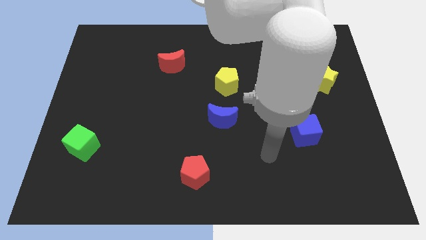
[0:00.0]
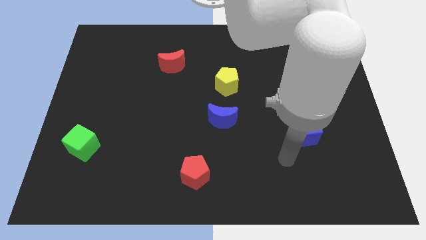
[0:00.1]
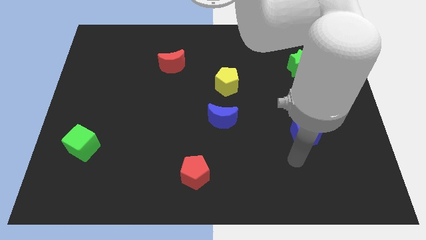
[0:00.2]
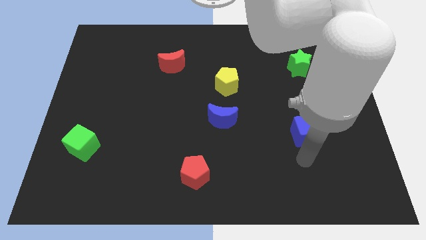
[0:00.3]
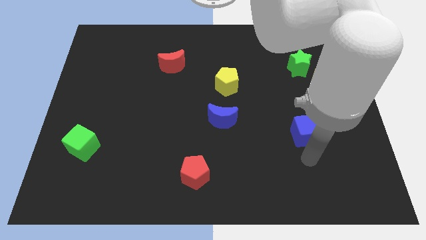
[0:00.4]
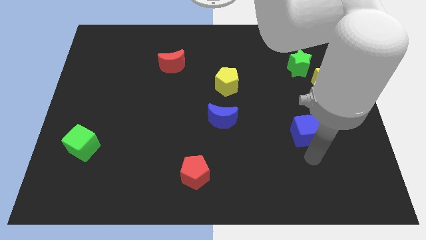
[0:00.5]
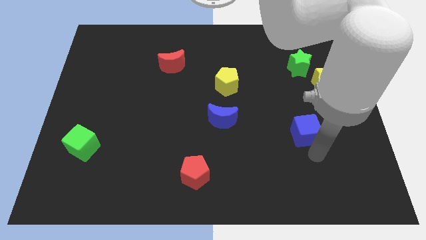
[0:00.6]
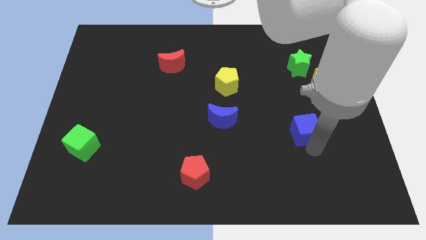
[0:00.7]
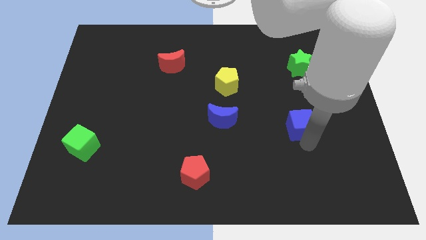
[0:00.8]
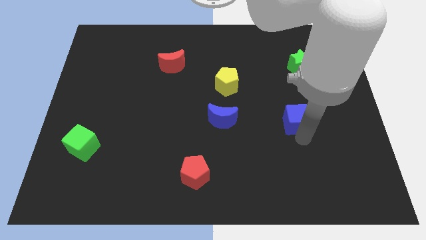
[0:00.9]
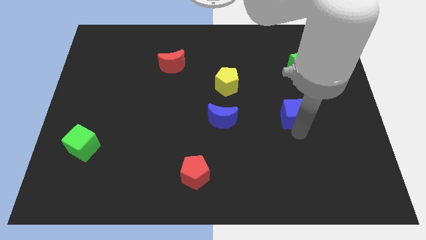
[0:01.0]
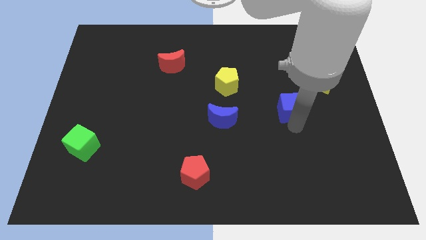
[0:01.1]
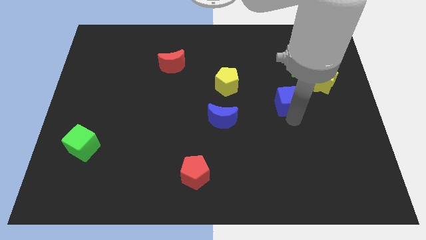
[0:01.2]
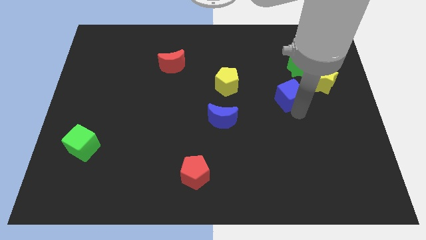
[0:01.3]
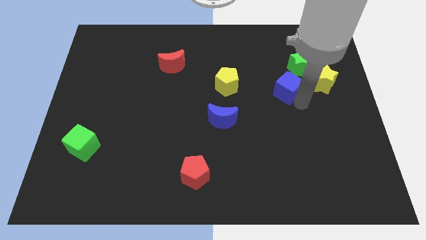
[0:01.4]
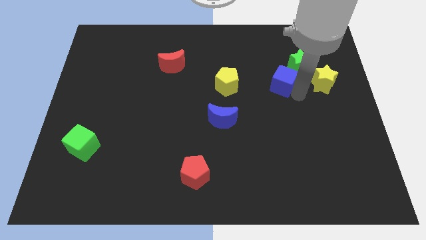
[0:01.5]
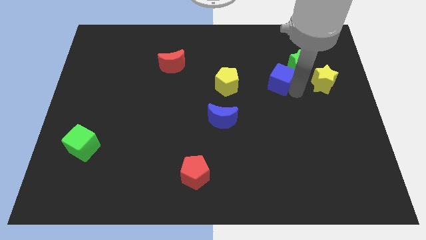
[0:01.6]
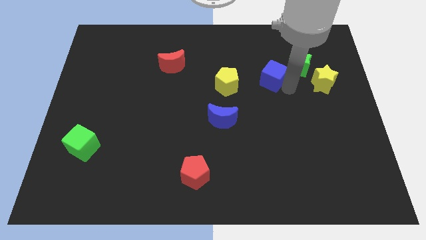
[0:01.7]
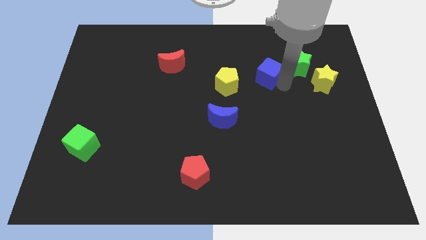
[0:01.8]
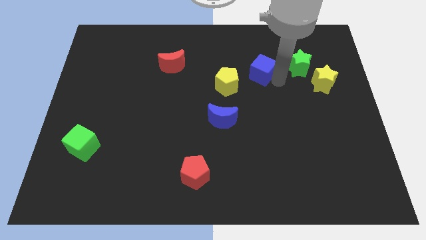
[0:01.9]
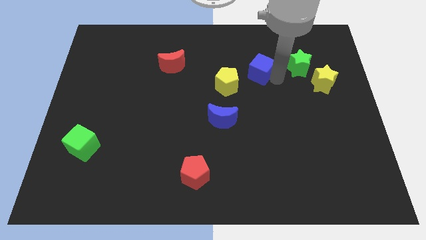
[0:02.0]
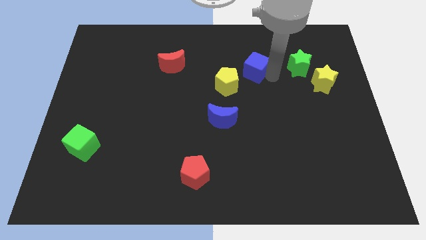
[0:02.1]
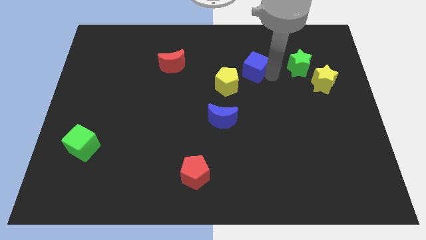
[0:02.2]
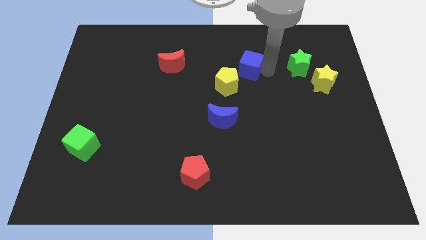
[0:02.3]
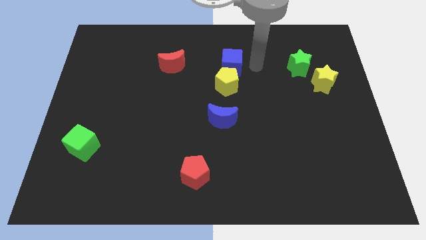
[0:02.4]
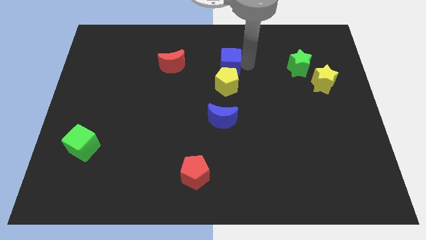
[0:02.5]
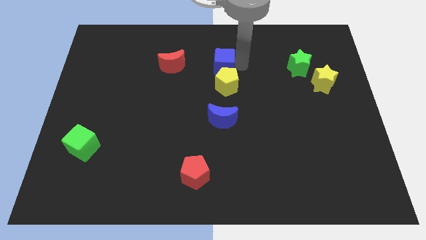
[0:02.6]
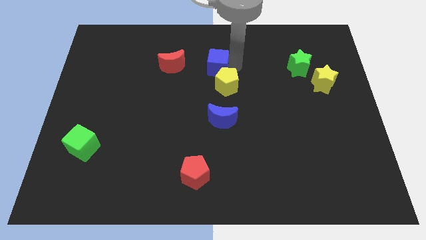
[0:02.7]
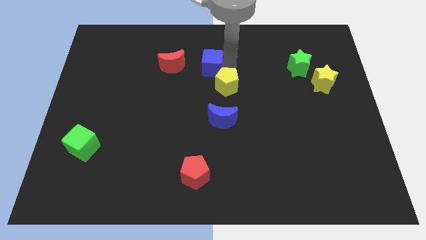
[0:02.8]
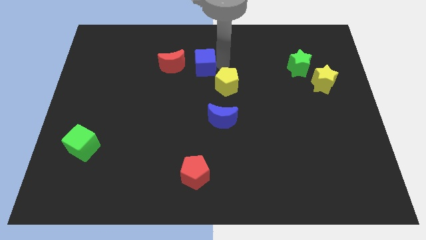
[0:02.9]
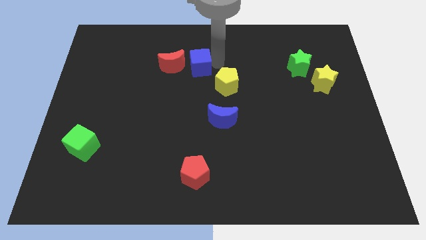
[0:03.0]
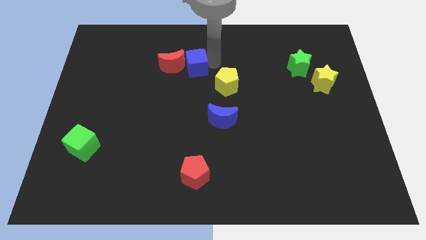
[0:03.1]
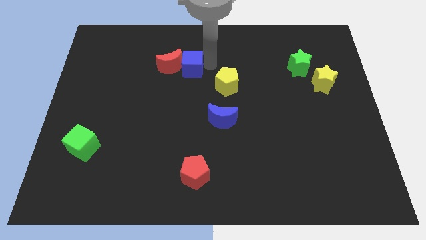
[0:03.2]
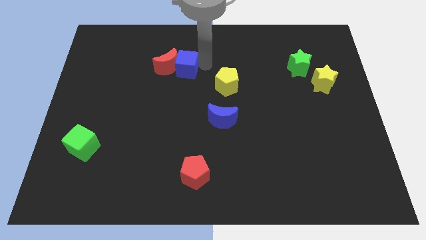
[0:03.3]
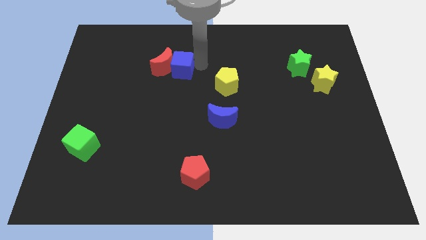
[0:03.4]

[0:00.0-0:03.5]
move the blue cube right beside the red moon

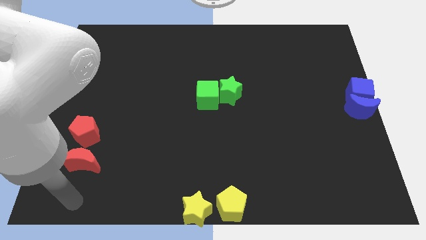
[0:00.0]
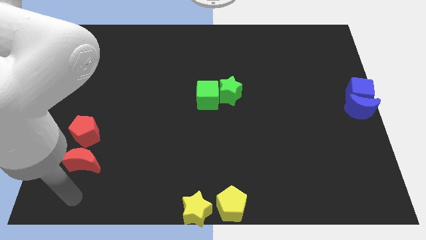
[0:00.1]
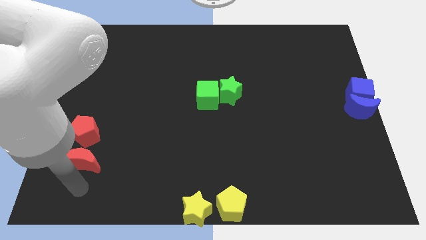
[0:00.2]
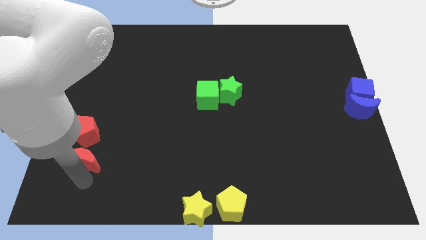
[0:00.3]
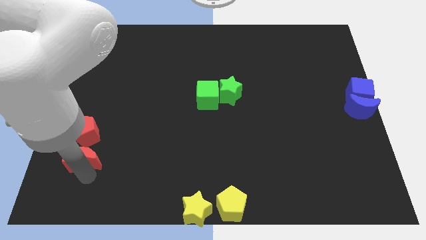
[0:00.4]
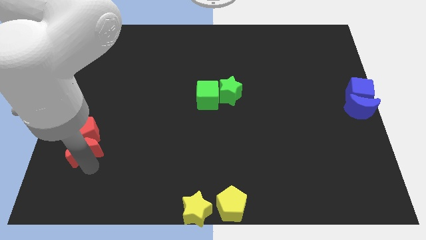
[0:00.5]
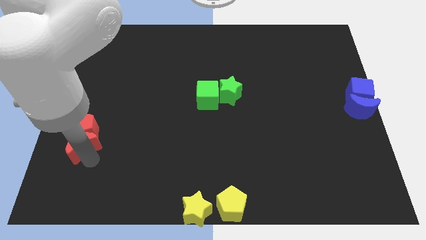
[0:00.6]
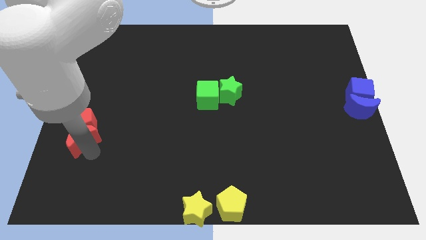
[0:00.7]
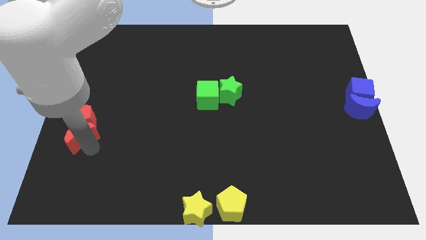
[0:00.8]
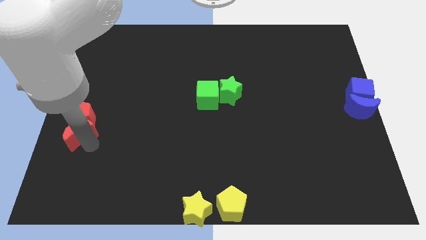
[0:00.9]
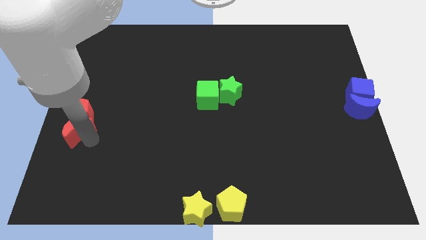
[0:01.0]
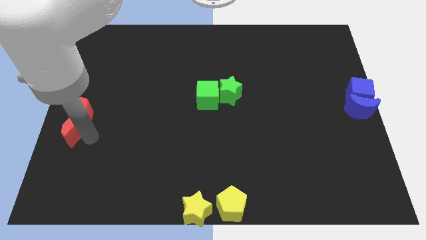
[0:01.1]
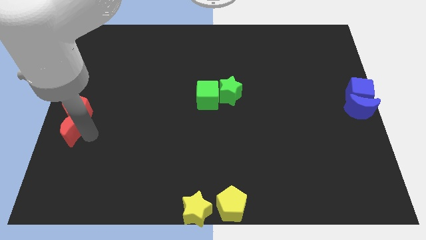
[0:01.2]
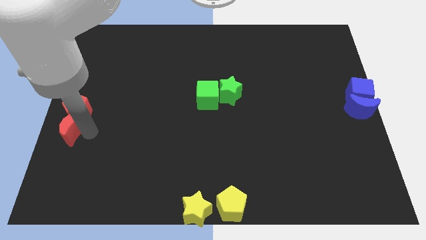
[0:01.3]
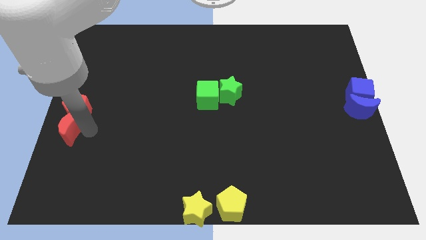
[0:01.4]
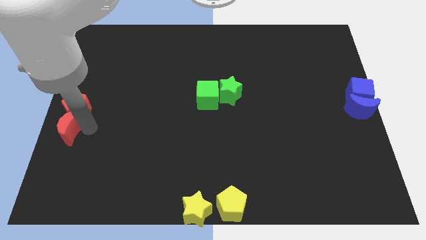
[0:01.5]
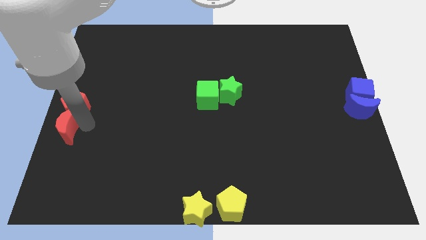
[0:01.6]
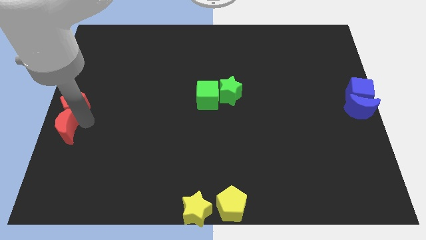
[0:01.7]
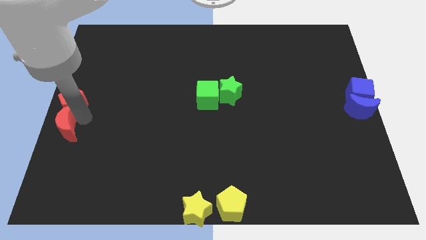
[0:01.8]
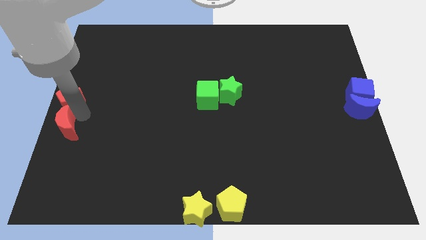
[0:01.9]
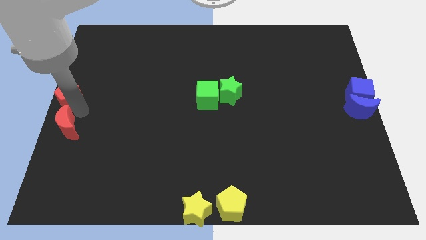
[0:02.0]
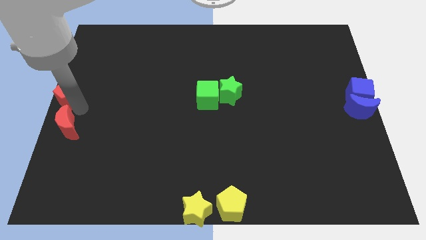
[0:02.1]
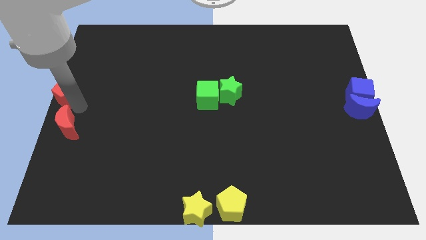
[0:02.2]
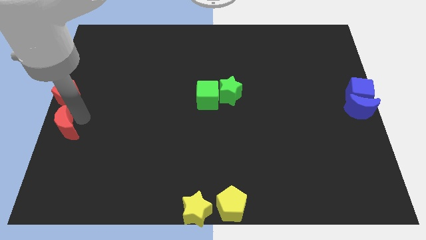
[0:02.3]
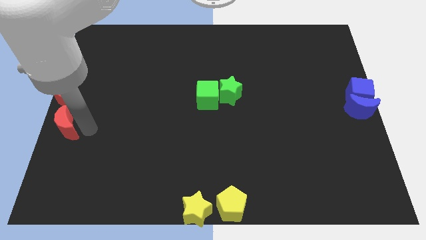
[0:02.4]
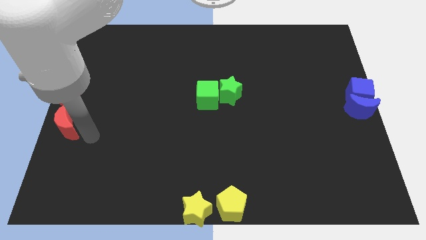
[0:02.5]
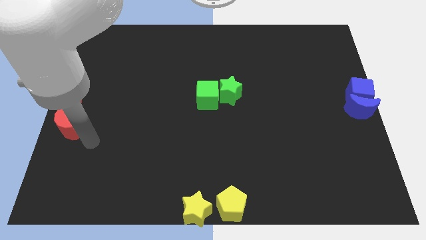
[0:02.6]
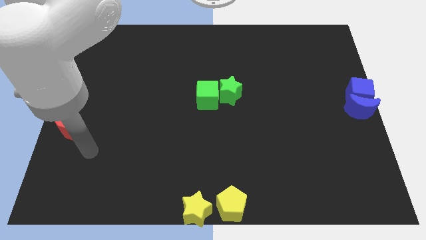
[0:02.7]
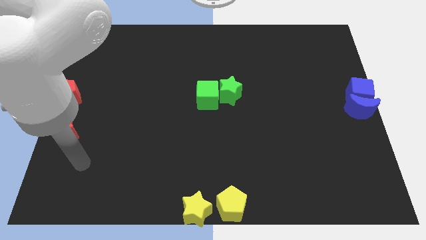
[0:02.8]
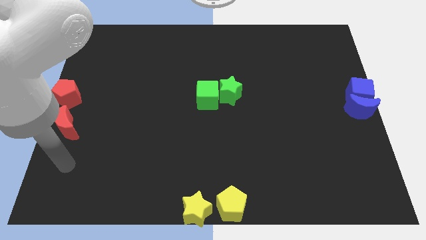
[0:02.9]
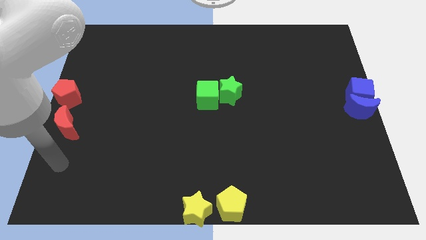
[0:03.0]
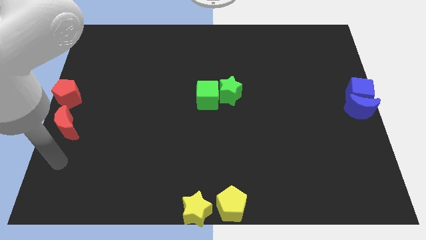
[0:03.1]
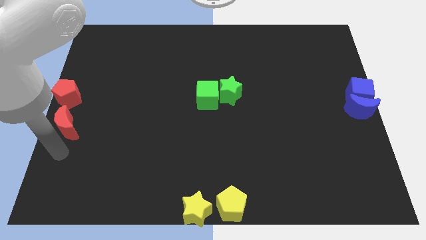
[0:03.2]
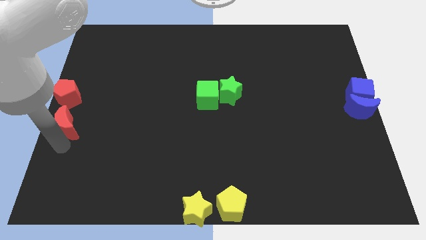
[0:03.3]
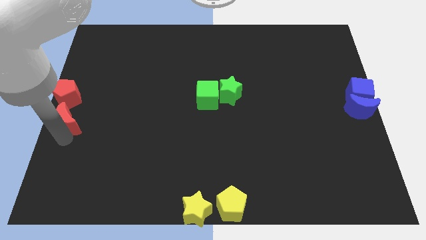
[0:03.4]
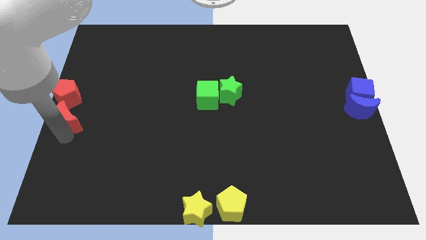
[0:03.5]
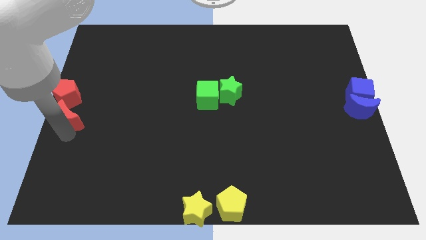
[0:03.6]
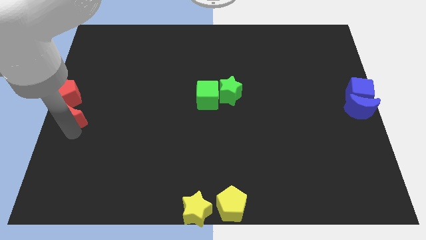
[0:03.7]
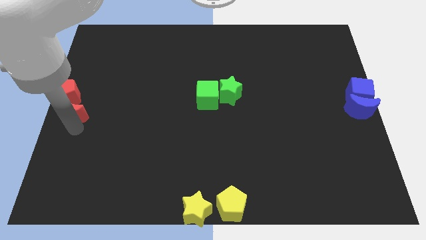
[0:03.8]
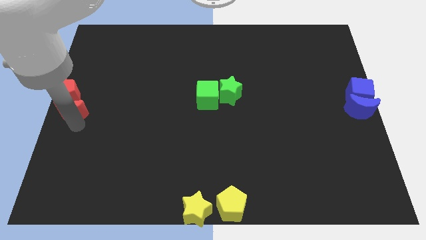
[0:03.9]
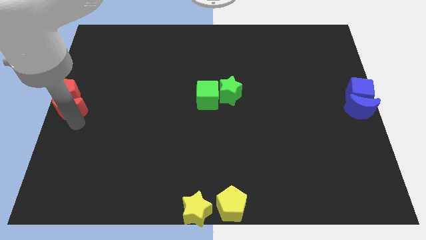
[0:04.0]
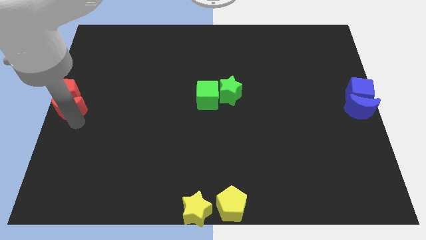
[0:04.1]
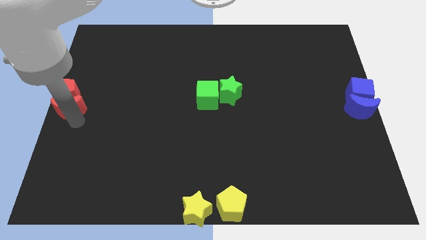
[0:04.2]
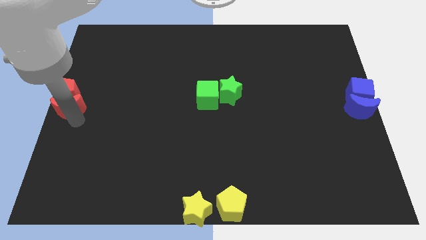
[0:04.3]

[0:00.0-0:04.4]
push the red pentagon to the center left of the board with the red crescent

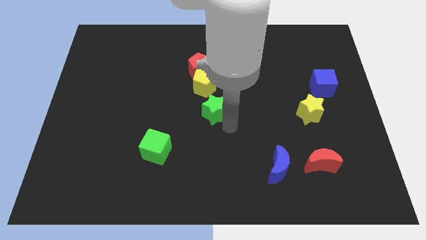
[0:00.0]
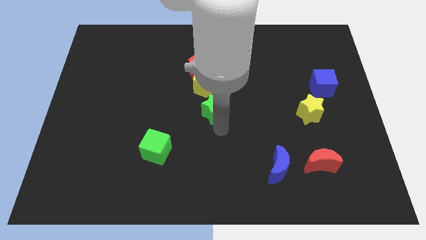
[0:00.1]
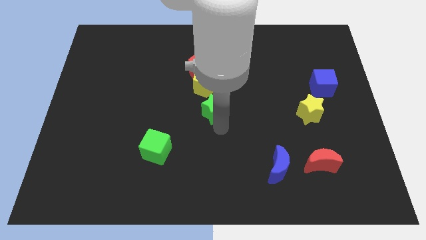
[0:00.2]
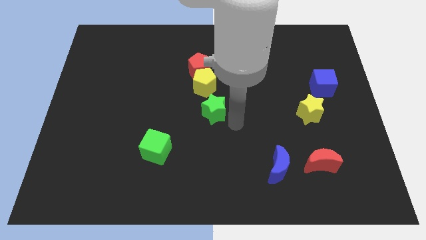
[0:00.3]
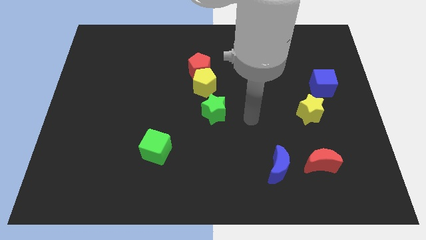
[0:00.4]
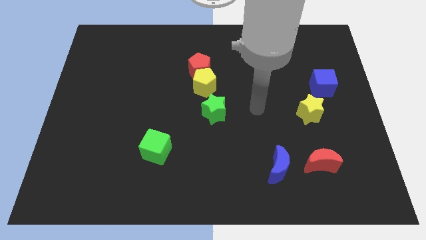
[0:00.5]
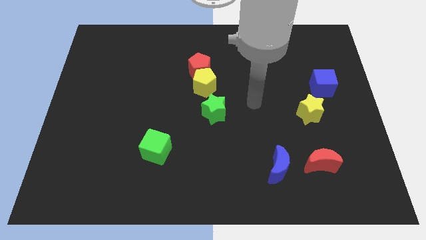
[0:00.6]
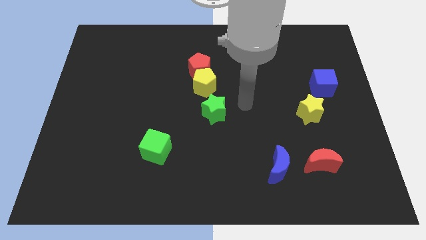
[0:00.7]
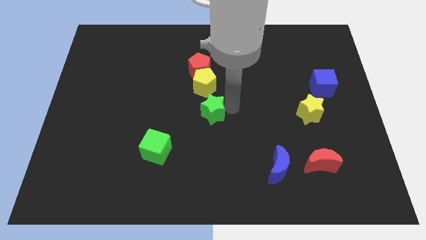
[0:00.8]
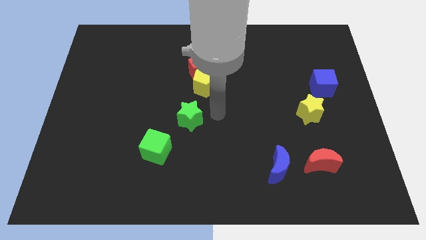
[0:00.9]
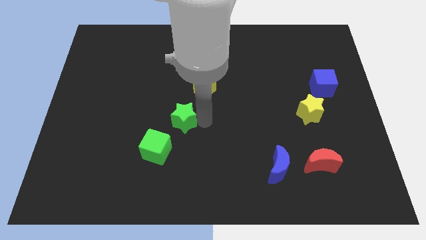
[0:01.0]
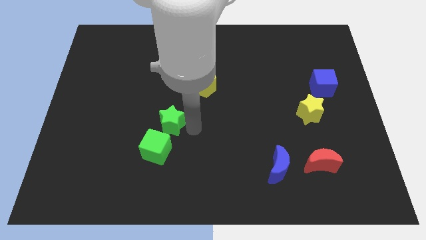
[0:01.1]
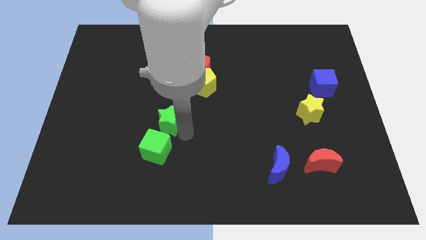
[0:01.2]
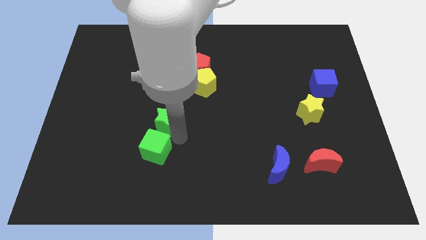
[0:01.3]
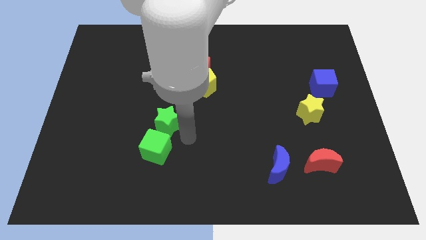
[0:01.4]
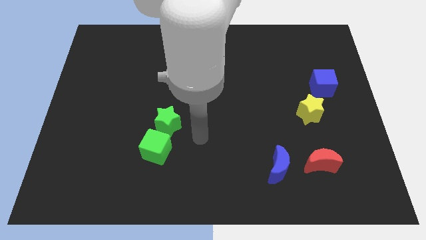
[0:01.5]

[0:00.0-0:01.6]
place the green star diagonal to the green cube
